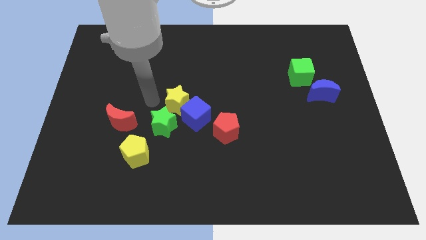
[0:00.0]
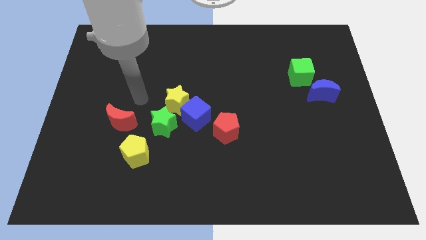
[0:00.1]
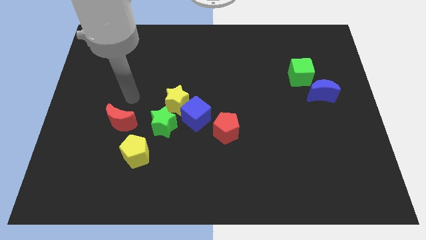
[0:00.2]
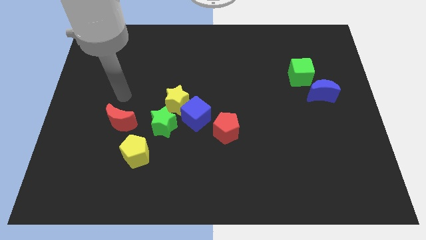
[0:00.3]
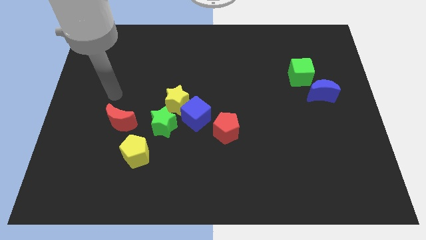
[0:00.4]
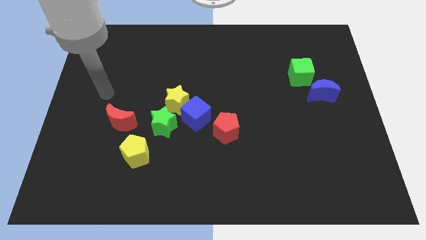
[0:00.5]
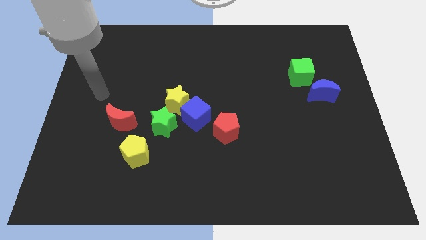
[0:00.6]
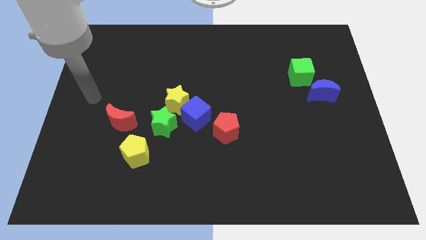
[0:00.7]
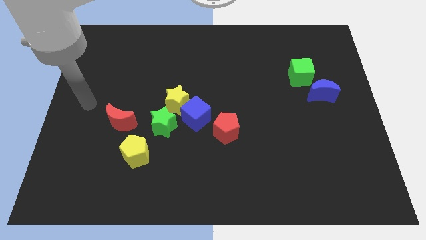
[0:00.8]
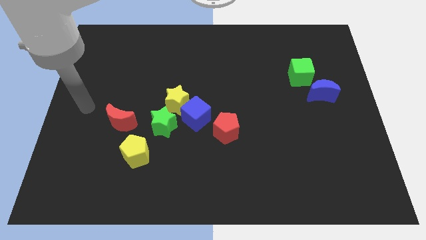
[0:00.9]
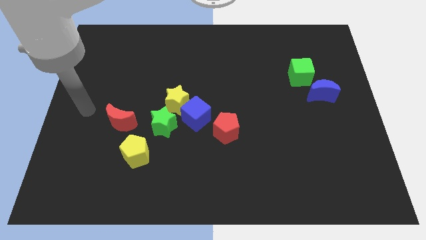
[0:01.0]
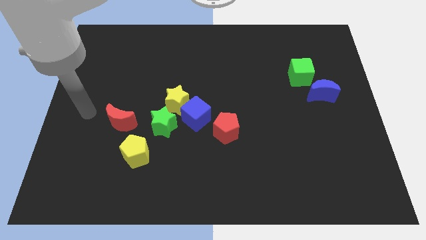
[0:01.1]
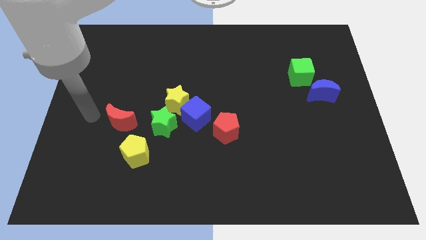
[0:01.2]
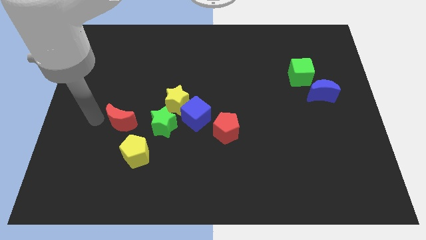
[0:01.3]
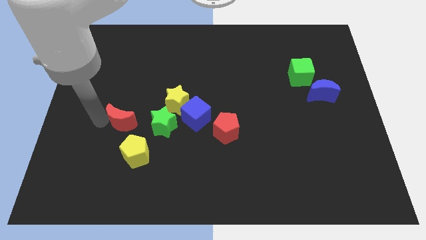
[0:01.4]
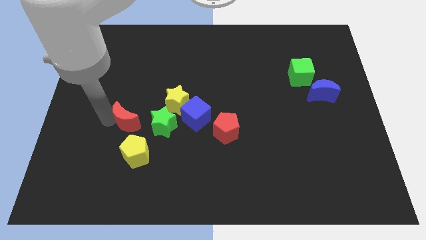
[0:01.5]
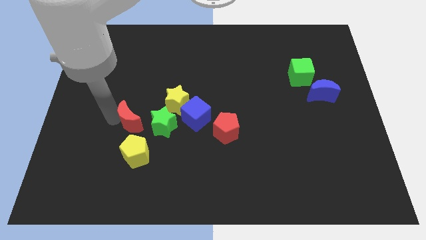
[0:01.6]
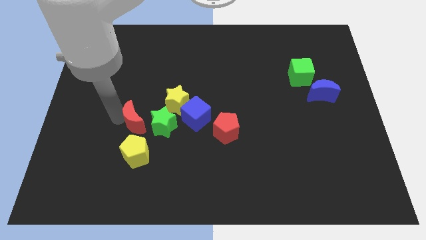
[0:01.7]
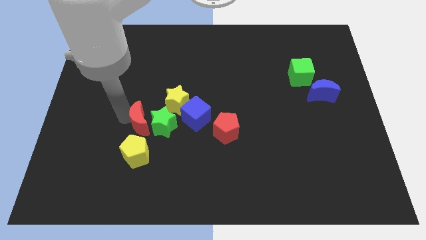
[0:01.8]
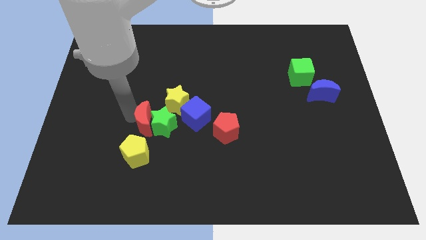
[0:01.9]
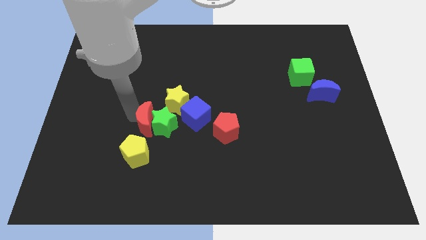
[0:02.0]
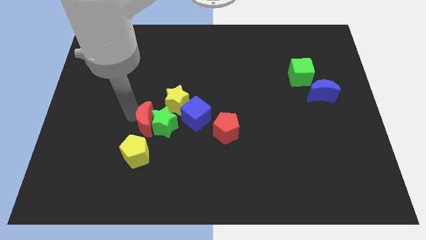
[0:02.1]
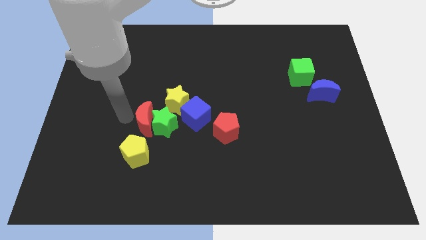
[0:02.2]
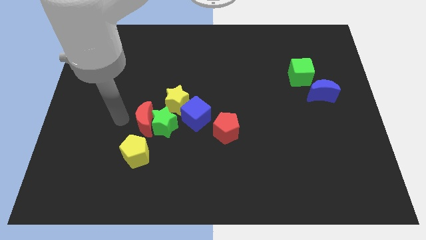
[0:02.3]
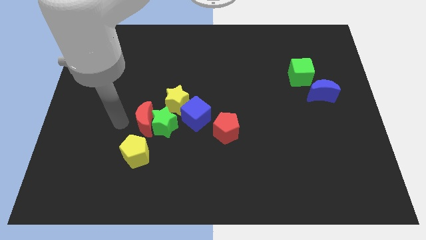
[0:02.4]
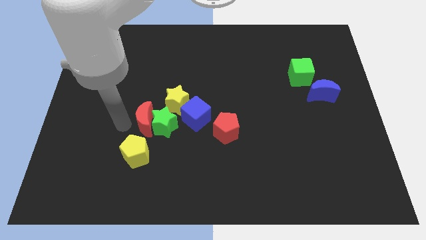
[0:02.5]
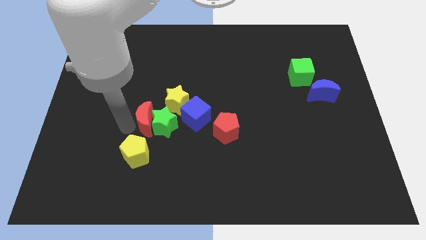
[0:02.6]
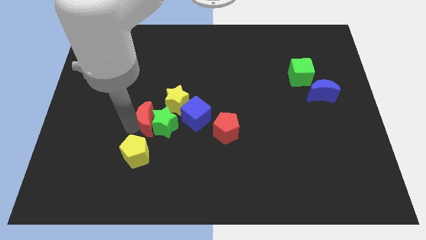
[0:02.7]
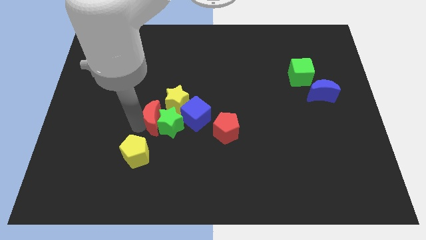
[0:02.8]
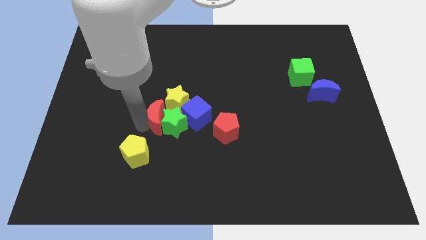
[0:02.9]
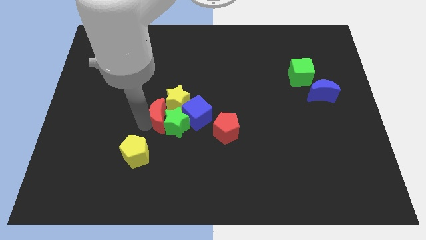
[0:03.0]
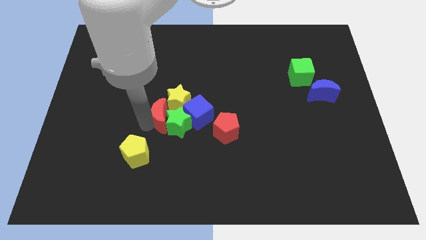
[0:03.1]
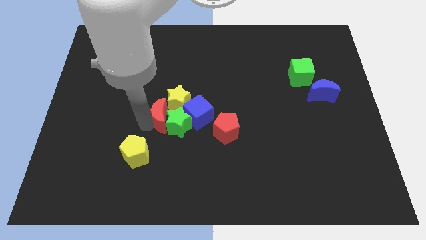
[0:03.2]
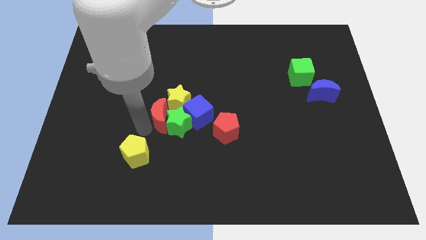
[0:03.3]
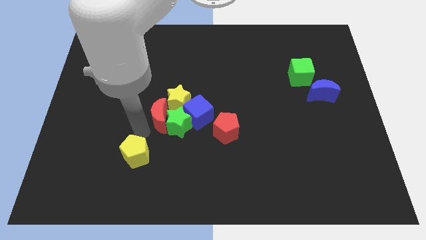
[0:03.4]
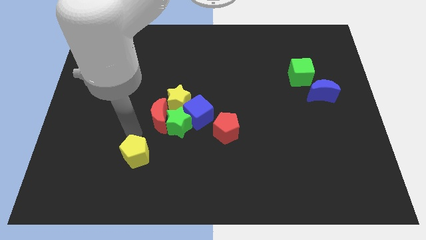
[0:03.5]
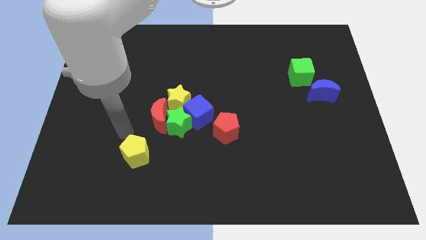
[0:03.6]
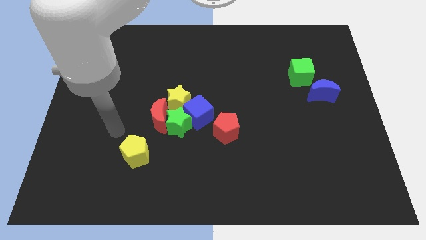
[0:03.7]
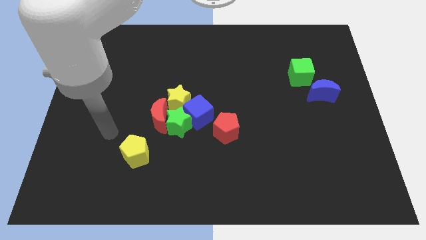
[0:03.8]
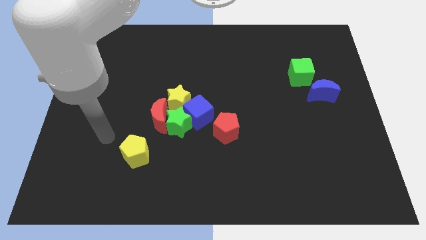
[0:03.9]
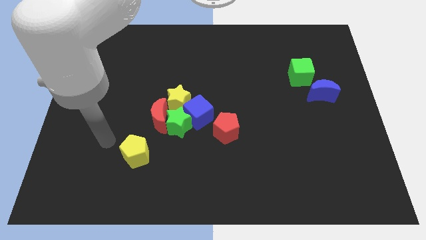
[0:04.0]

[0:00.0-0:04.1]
move the red crescent to the left of the green star

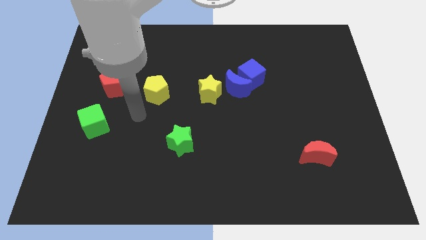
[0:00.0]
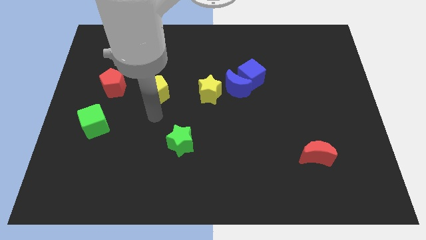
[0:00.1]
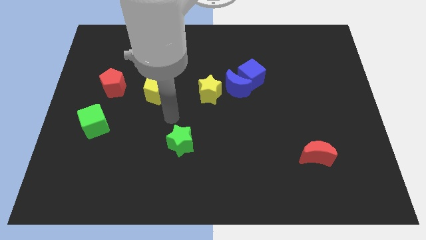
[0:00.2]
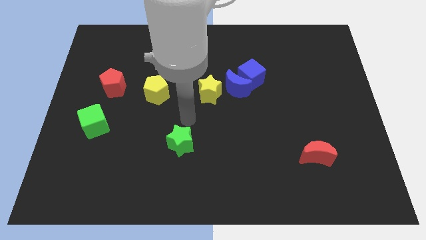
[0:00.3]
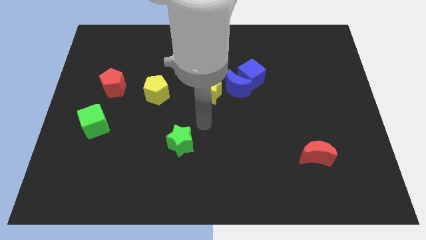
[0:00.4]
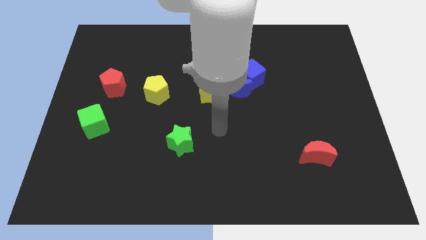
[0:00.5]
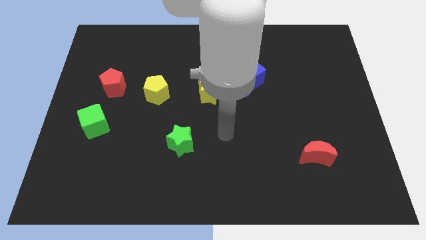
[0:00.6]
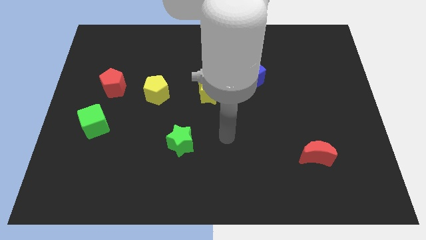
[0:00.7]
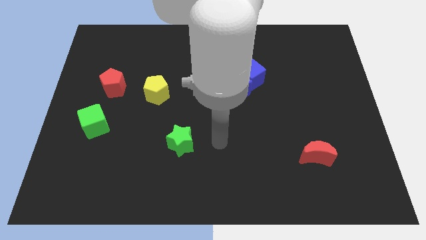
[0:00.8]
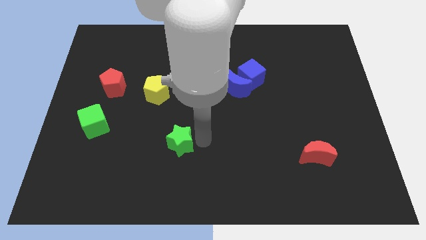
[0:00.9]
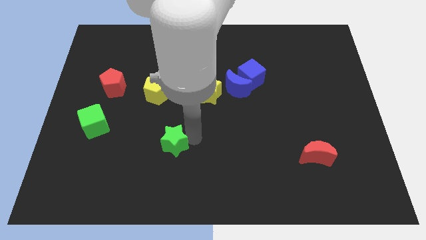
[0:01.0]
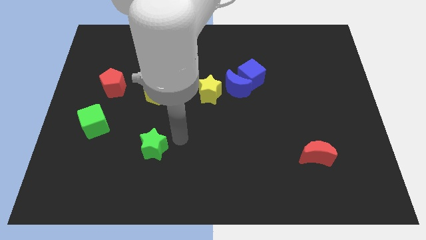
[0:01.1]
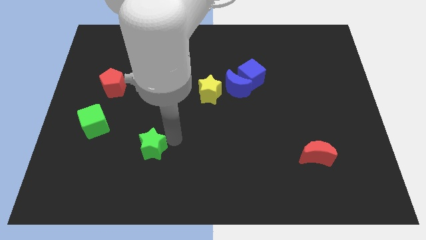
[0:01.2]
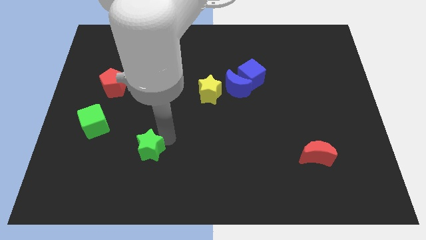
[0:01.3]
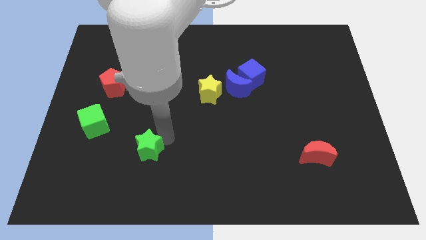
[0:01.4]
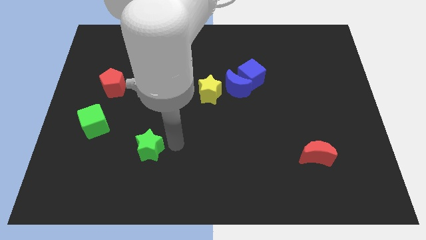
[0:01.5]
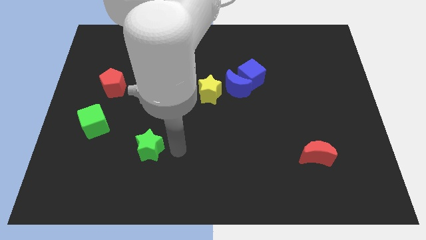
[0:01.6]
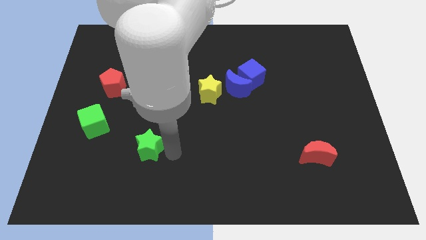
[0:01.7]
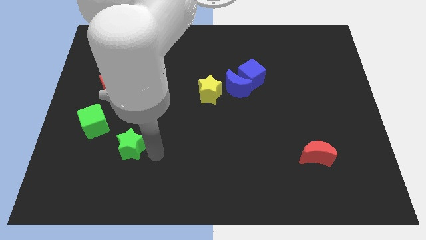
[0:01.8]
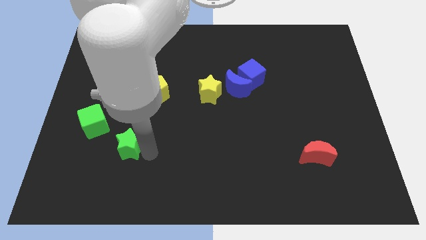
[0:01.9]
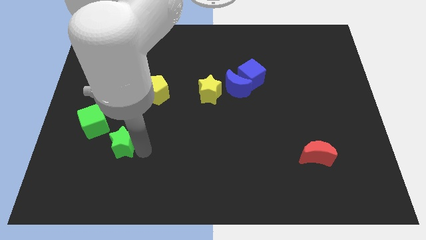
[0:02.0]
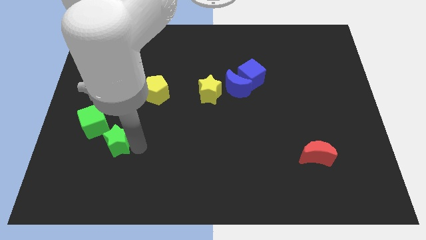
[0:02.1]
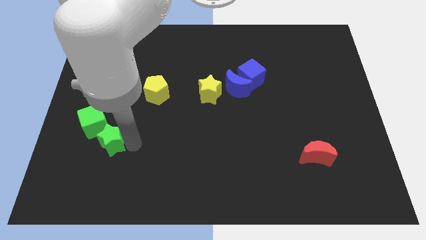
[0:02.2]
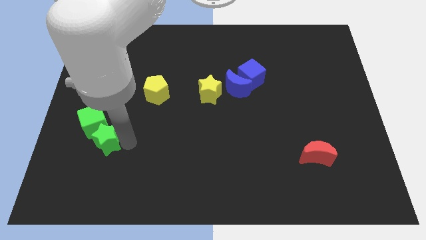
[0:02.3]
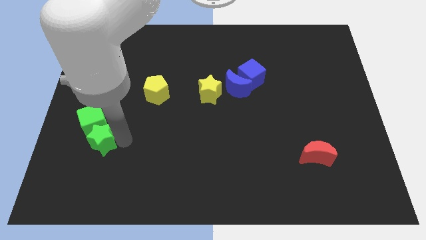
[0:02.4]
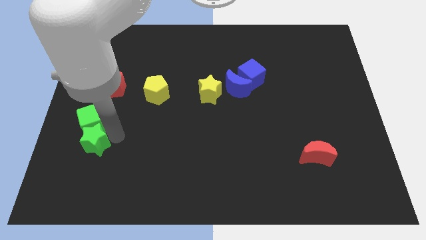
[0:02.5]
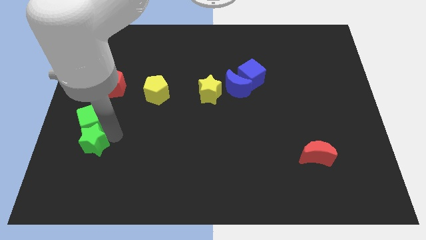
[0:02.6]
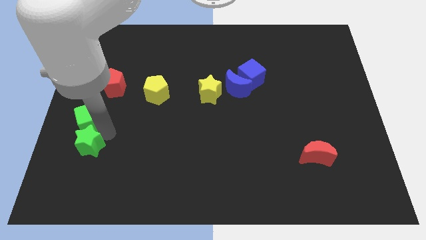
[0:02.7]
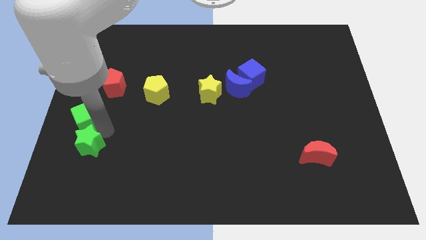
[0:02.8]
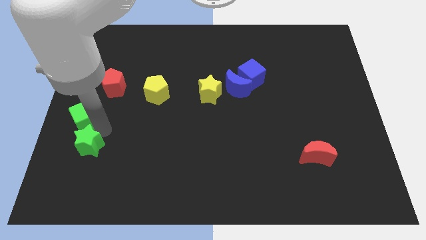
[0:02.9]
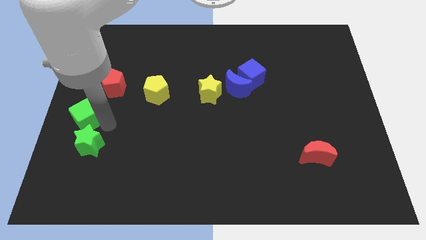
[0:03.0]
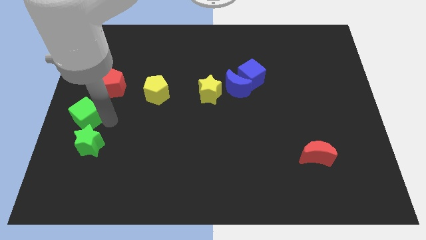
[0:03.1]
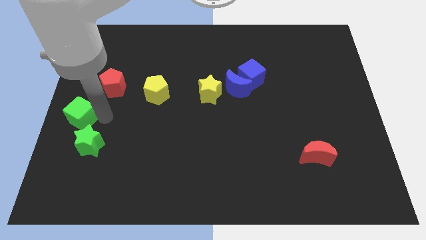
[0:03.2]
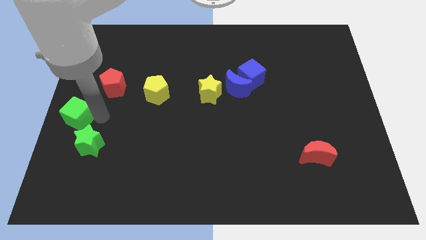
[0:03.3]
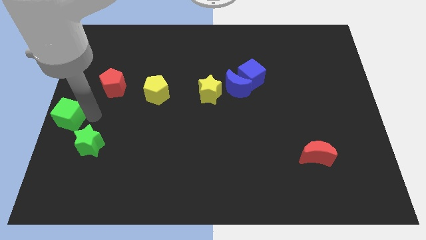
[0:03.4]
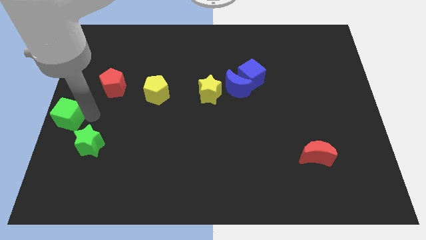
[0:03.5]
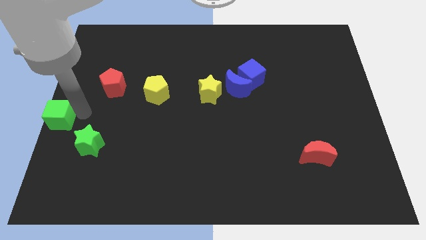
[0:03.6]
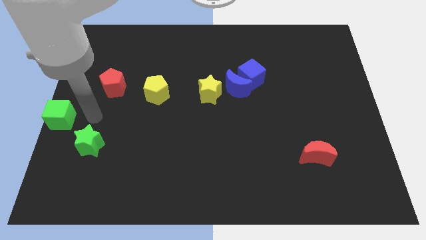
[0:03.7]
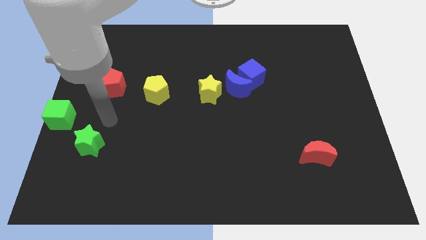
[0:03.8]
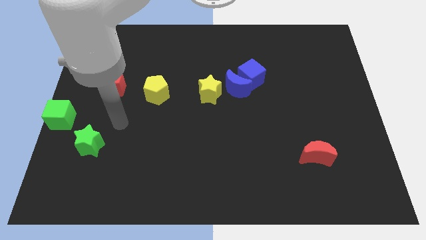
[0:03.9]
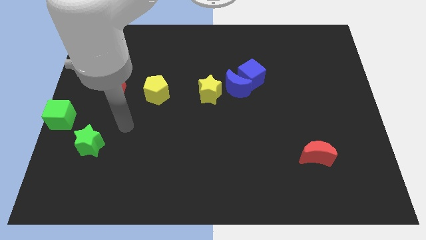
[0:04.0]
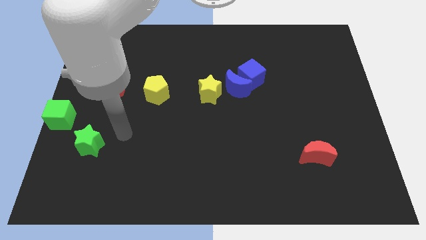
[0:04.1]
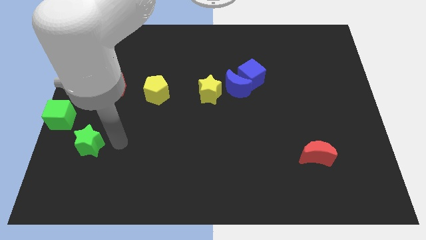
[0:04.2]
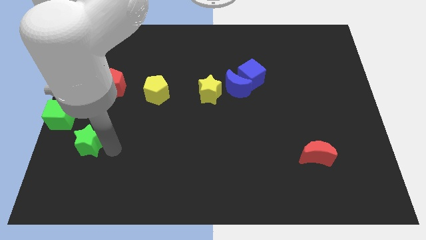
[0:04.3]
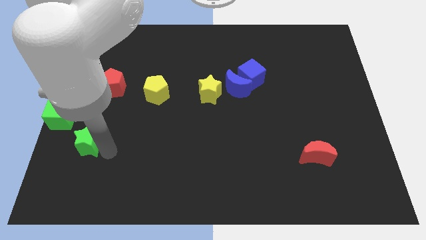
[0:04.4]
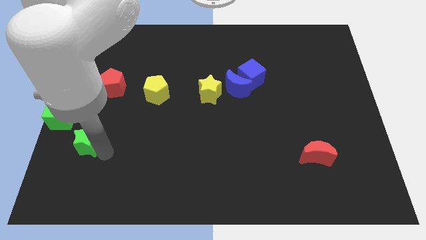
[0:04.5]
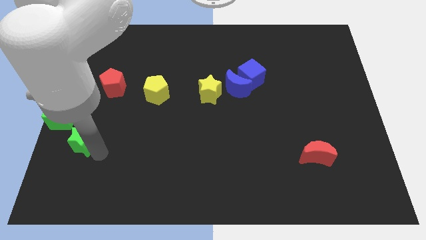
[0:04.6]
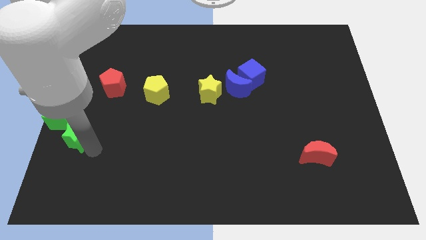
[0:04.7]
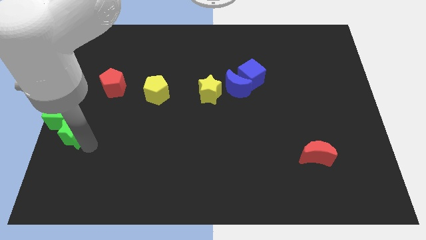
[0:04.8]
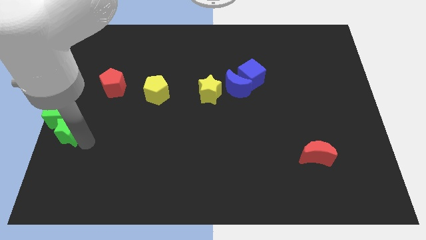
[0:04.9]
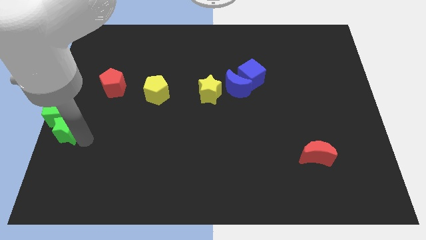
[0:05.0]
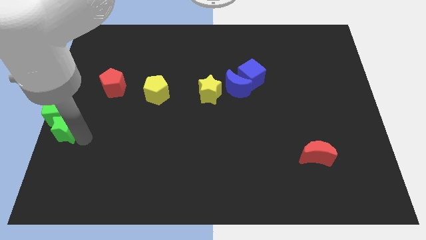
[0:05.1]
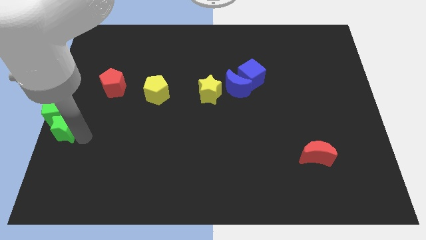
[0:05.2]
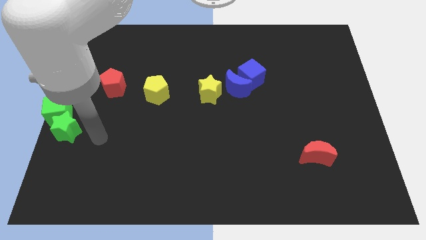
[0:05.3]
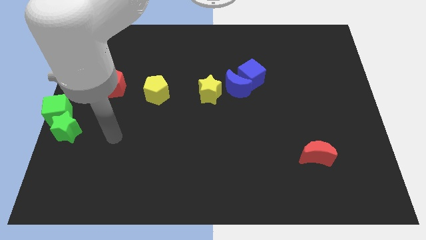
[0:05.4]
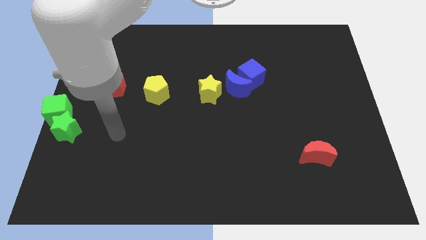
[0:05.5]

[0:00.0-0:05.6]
push the green star to the bottom side of the green cube
